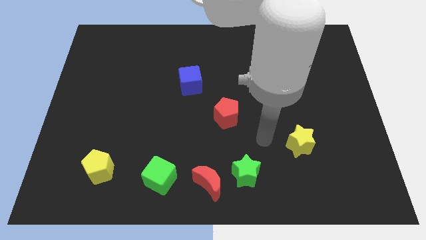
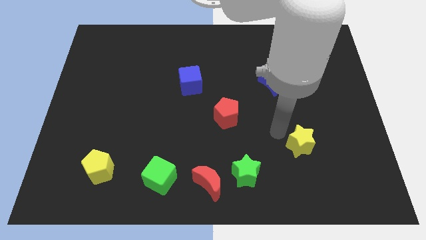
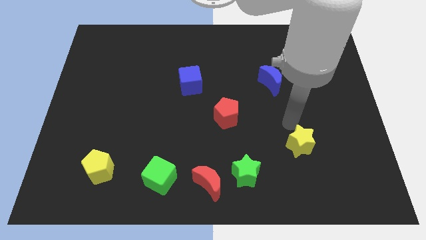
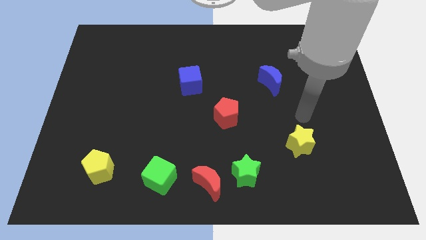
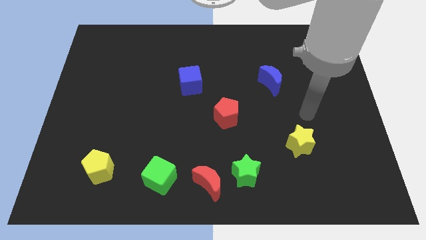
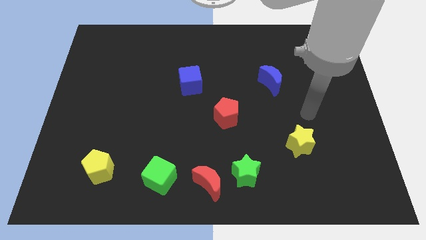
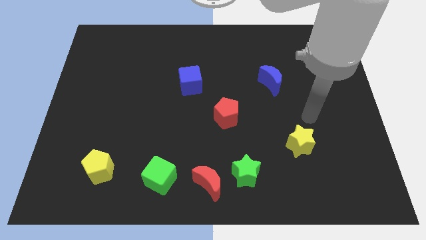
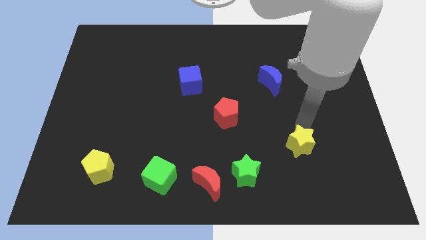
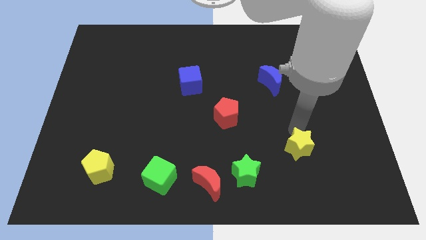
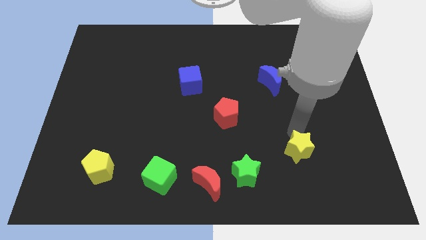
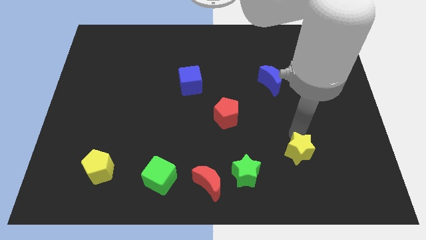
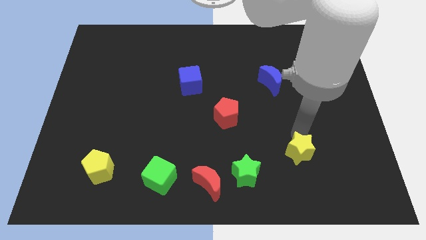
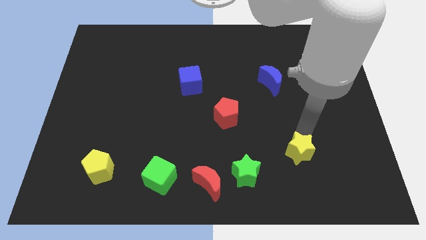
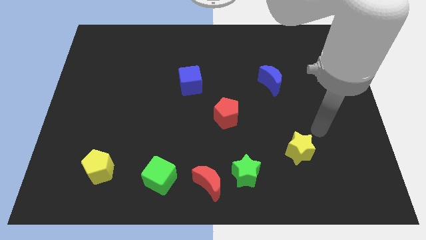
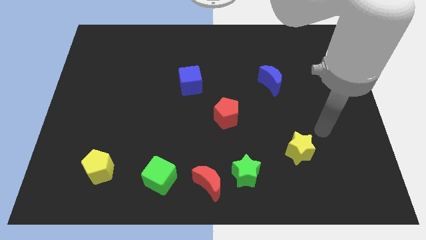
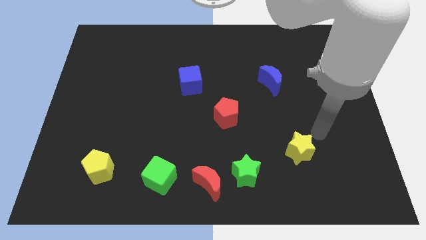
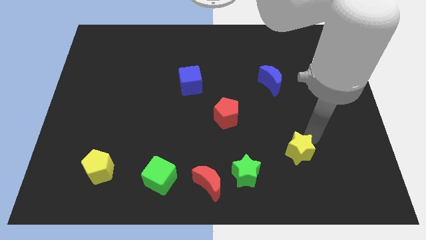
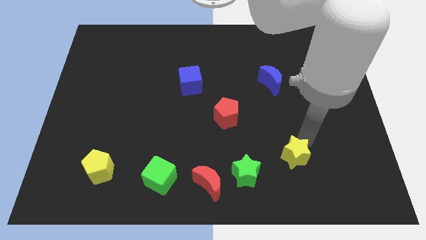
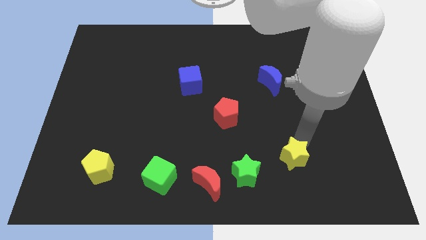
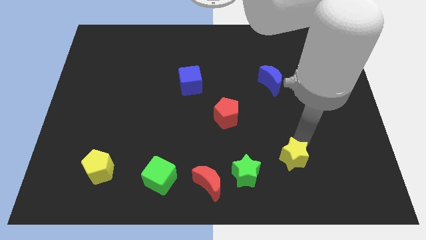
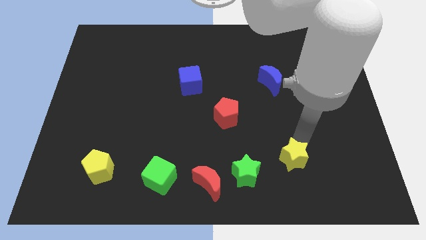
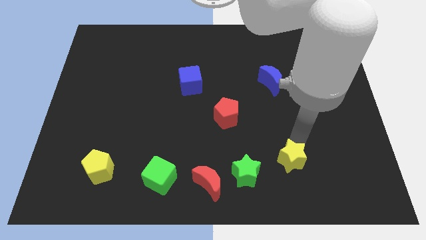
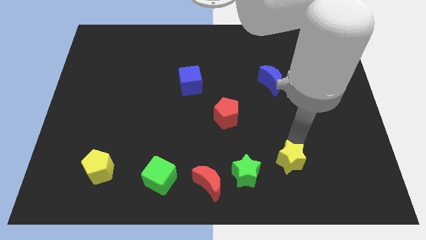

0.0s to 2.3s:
move the yellow star right to green star

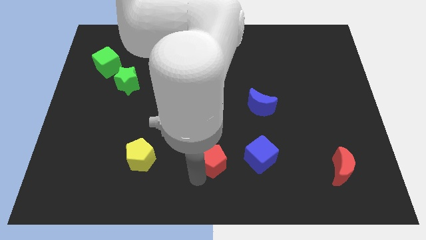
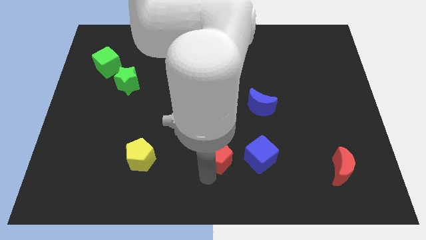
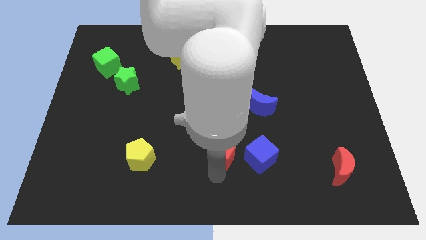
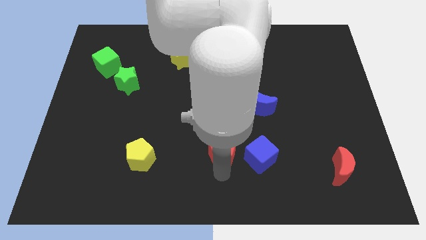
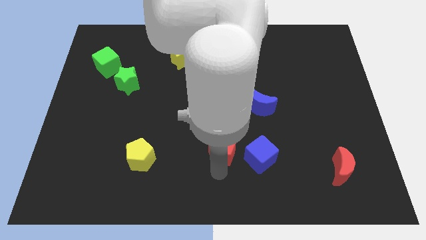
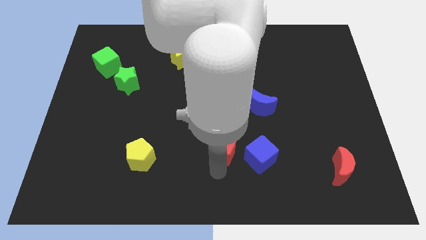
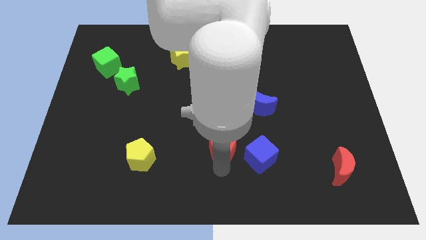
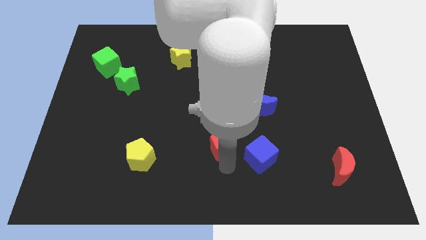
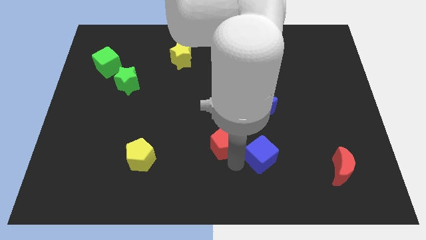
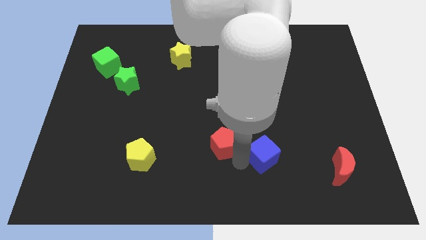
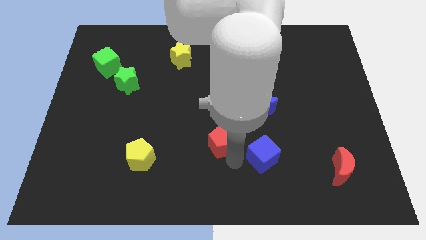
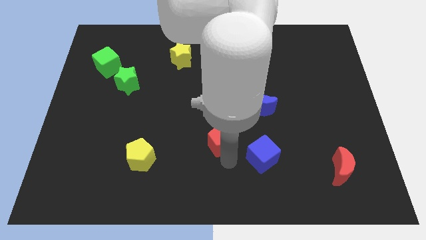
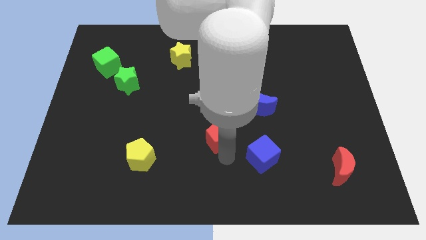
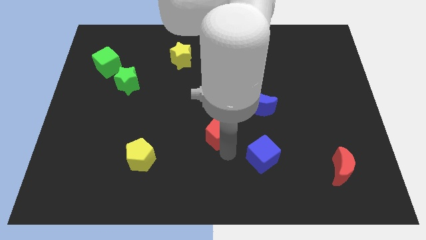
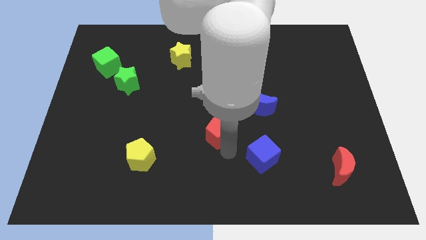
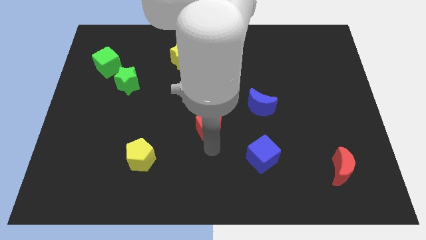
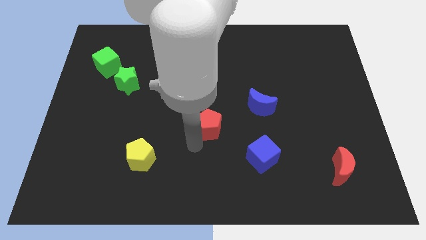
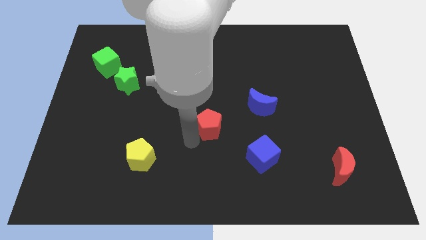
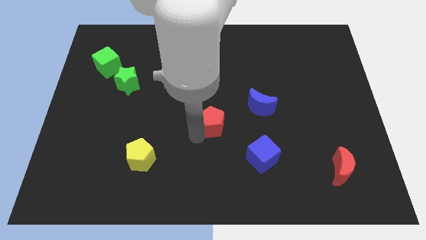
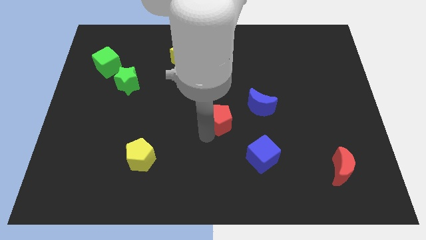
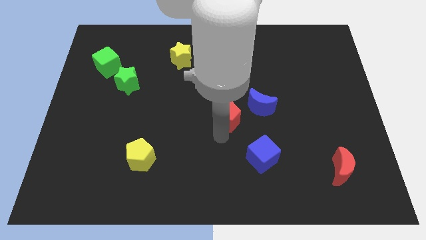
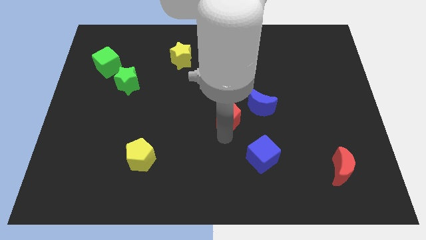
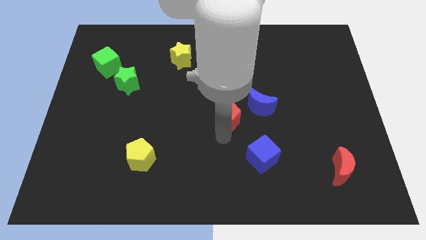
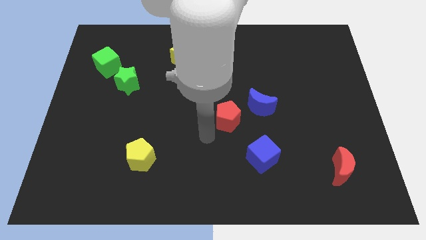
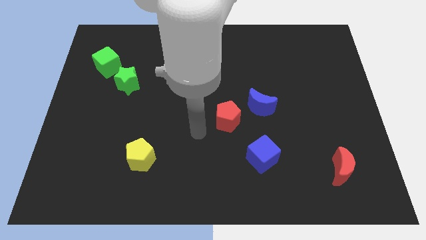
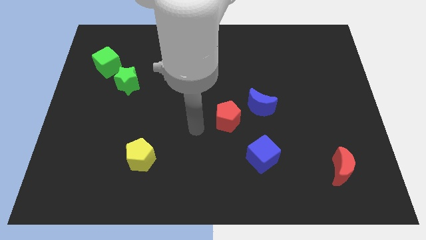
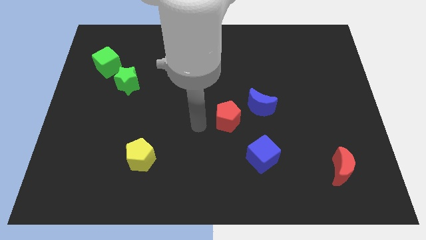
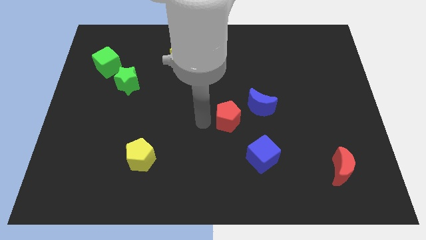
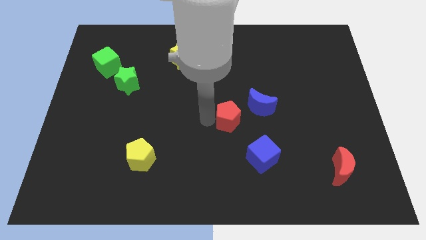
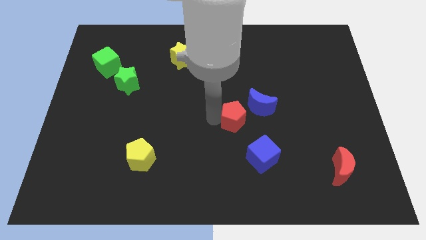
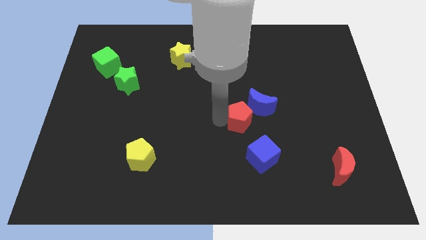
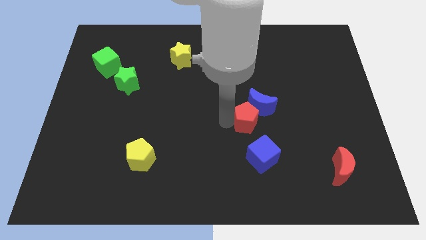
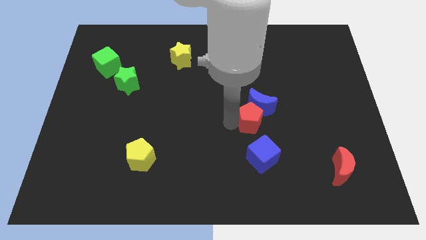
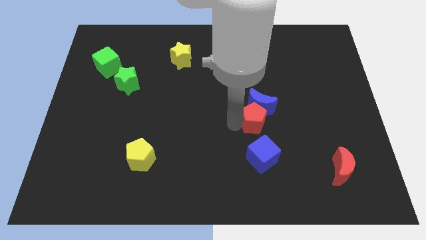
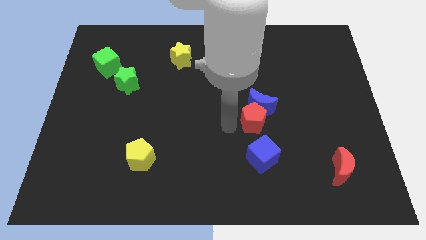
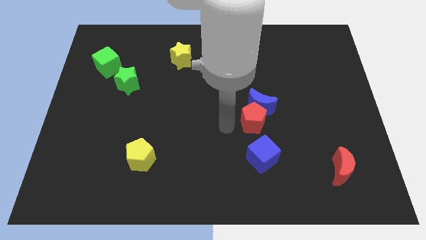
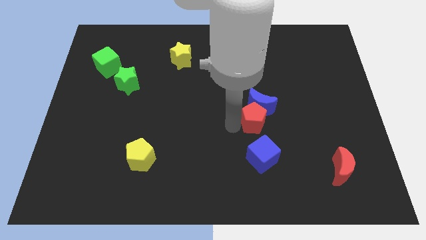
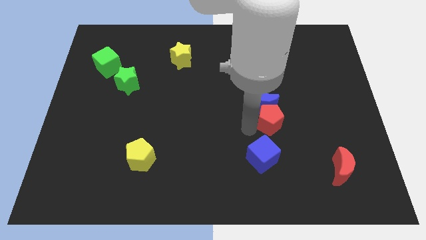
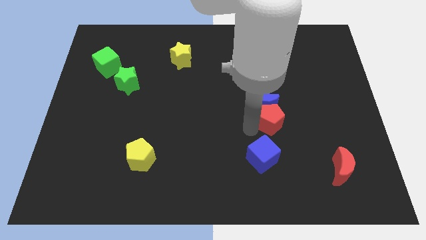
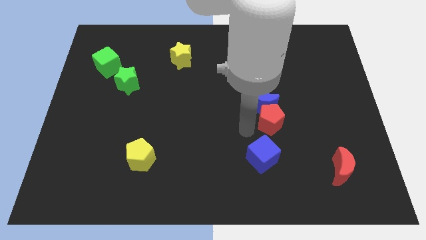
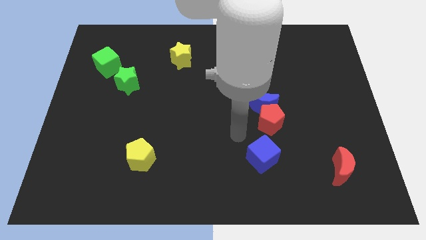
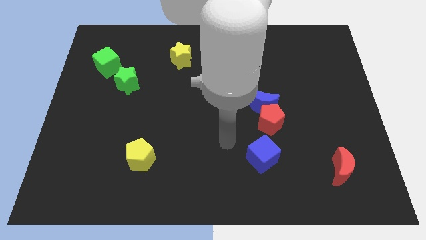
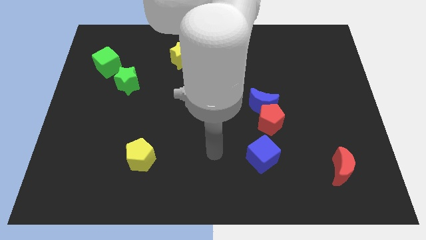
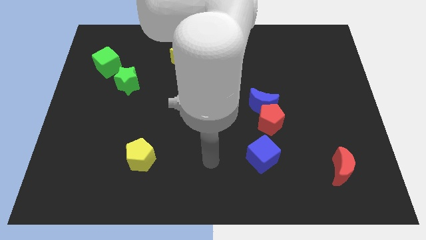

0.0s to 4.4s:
place the red pentagon below the blue crescent

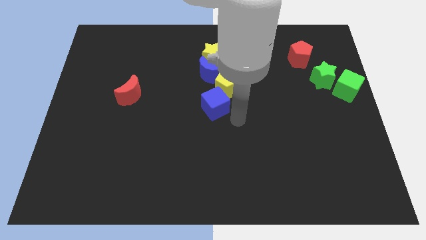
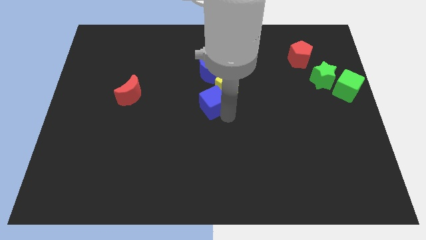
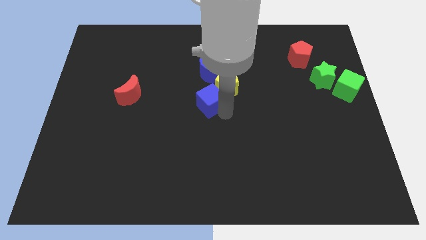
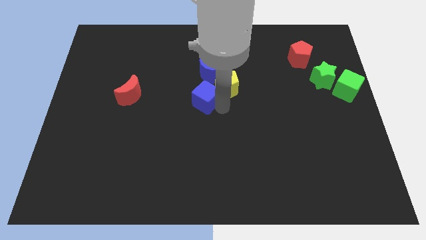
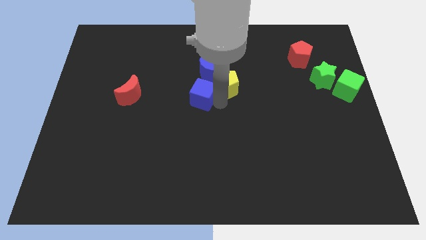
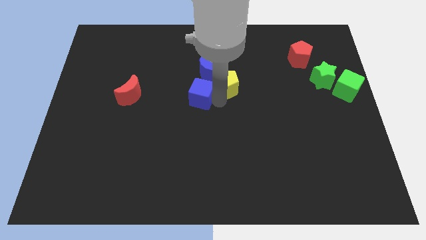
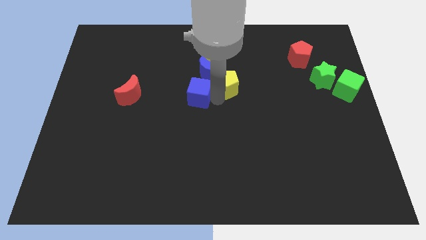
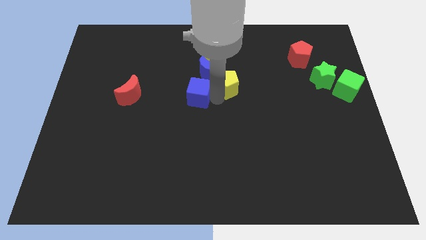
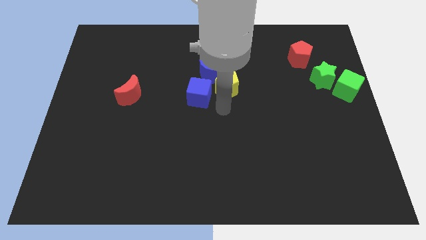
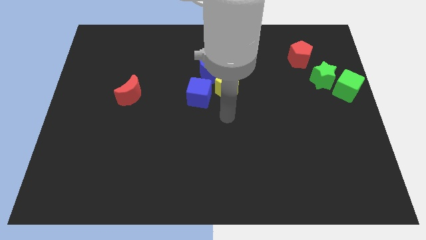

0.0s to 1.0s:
place the blue cube parallel to the red moon

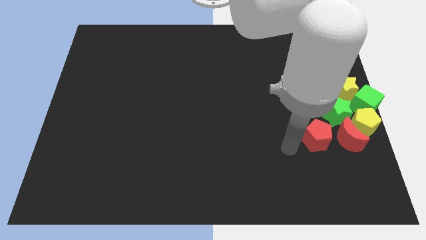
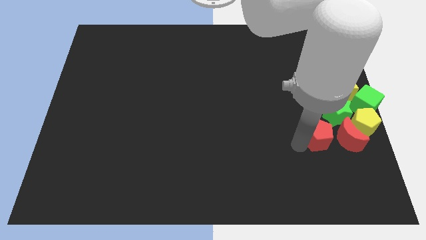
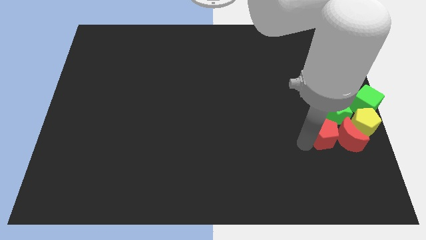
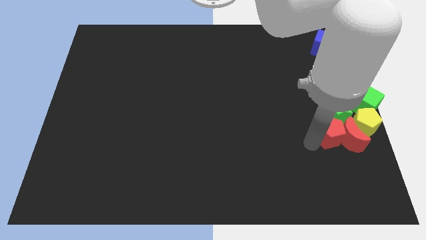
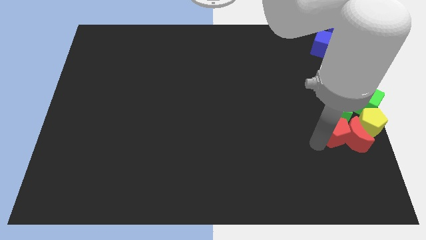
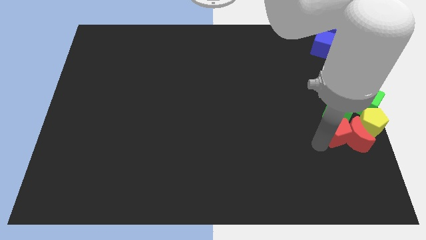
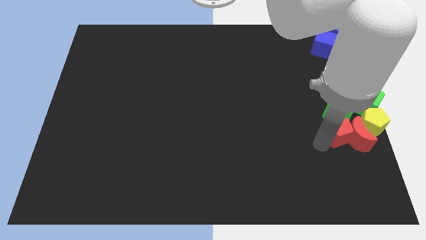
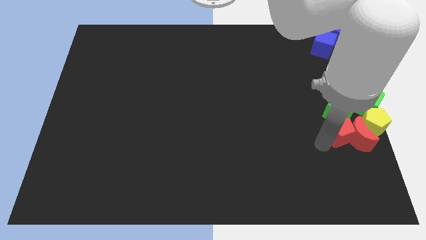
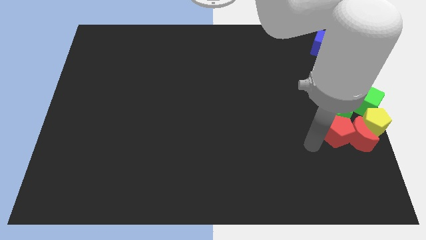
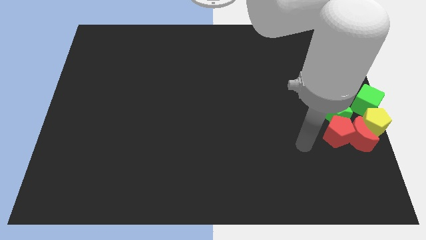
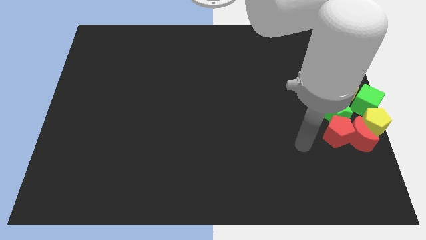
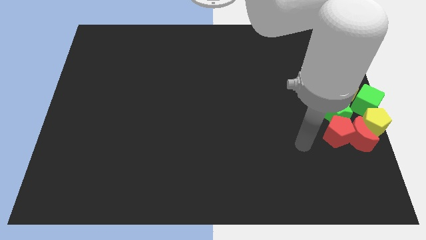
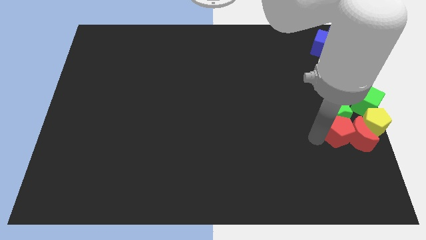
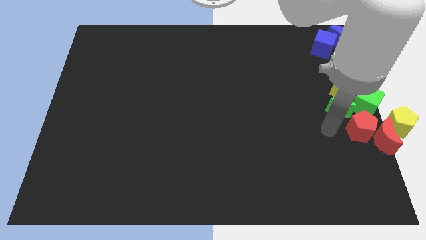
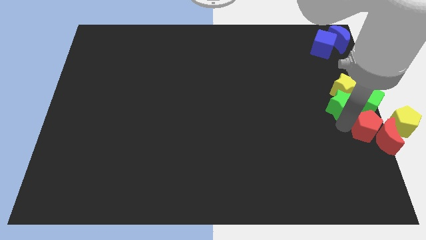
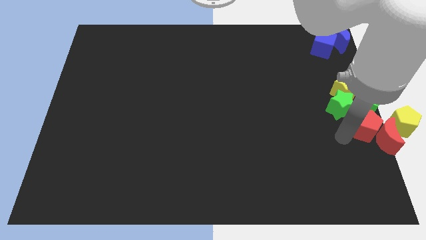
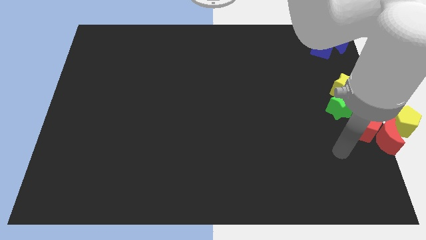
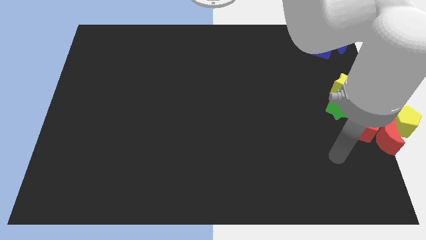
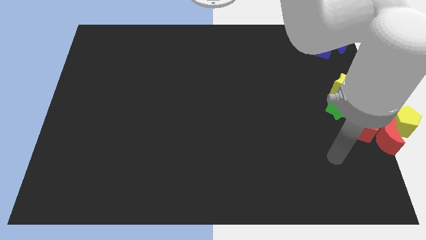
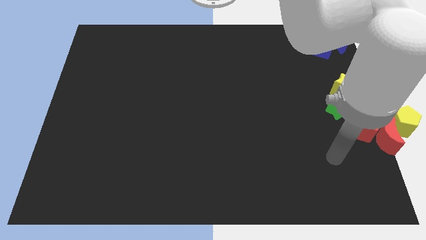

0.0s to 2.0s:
push the red pentagon into the red moon
